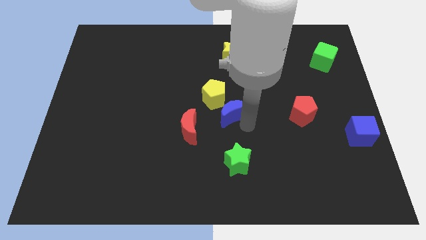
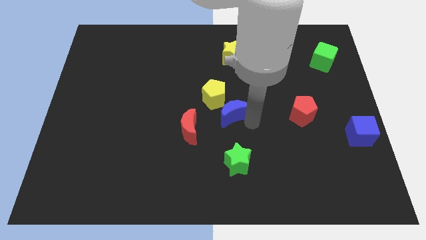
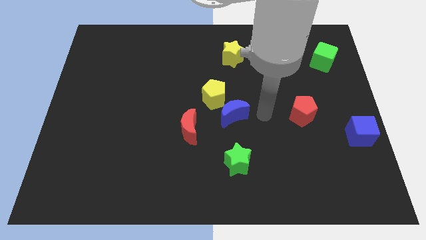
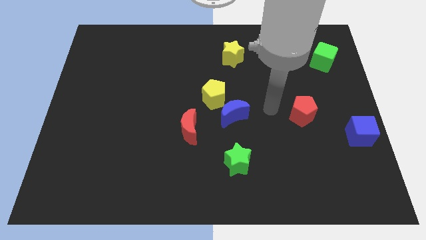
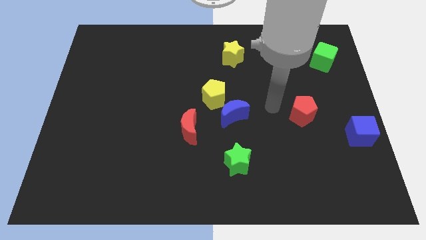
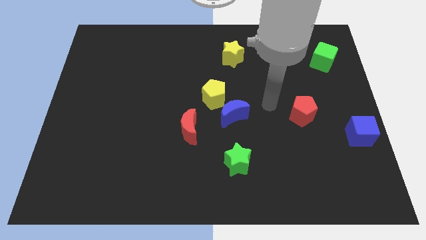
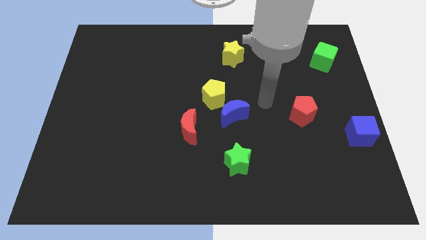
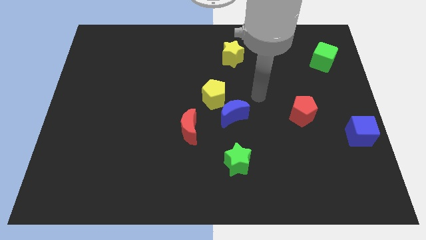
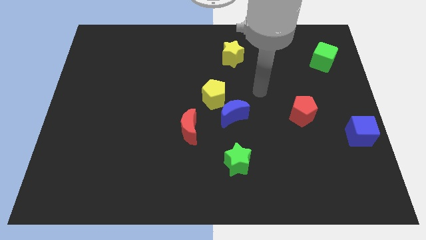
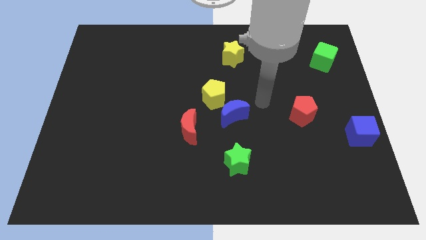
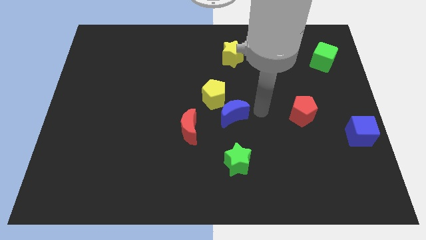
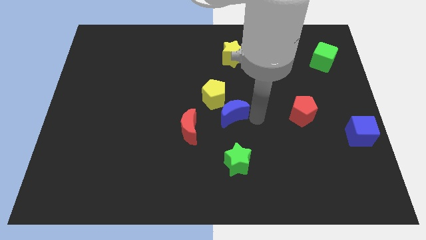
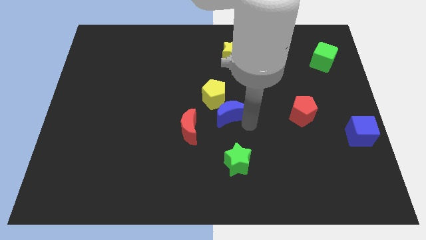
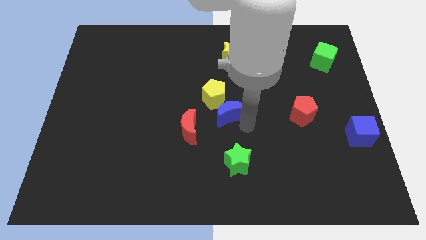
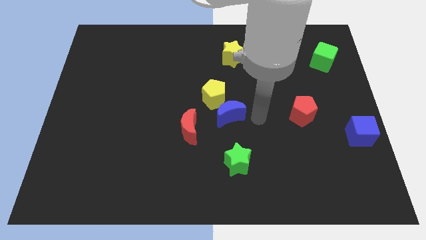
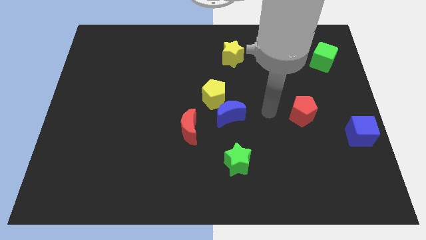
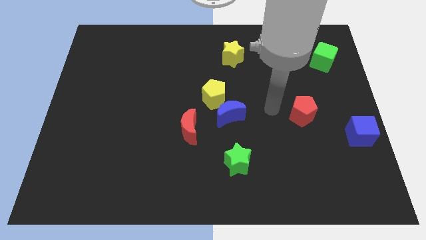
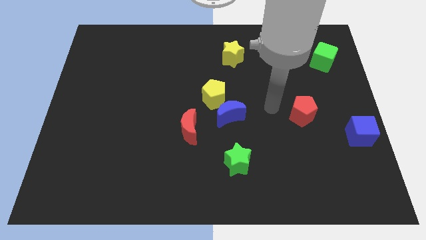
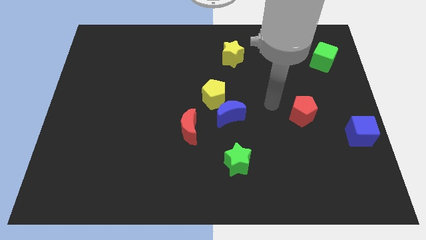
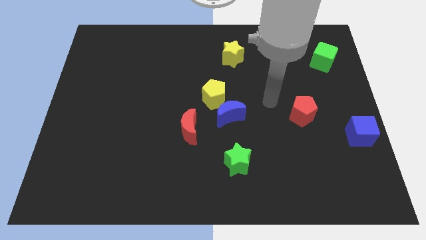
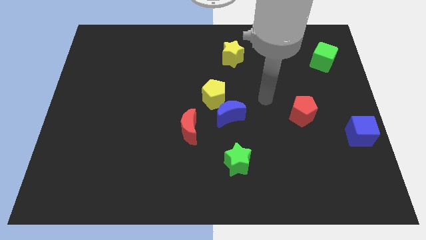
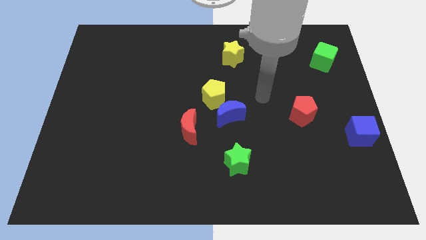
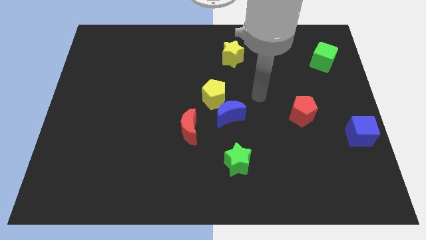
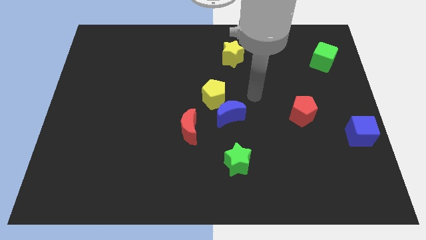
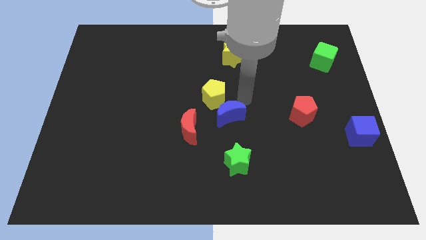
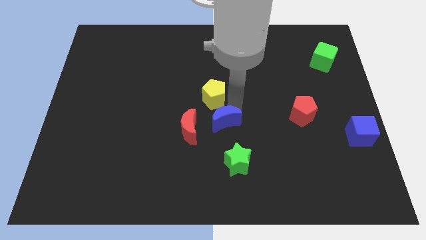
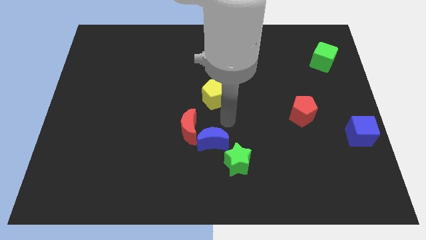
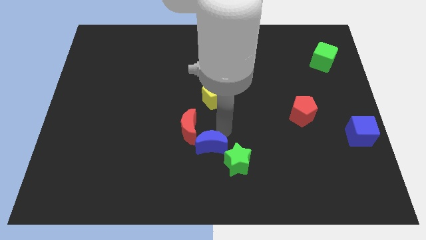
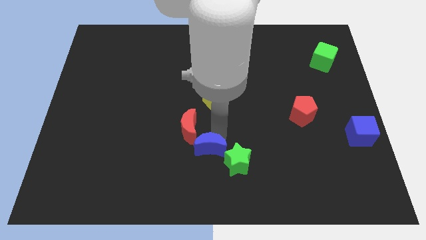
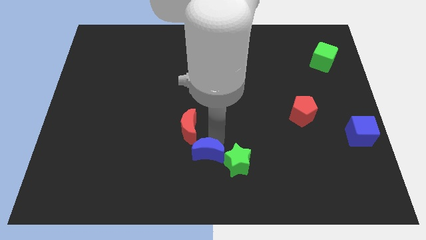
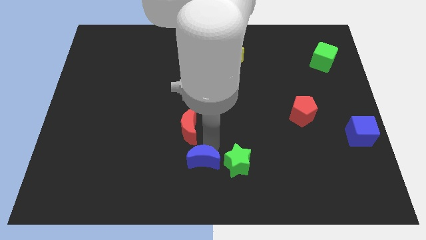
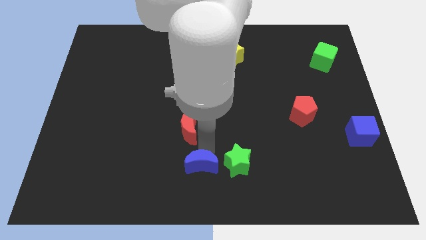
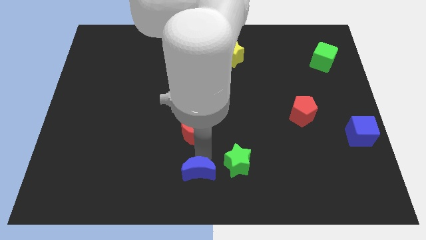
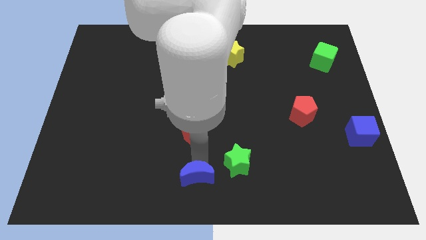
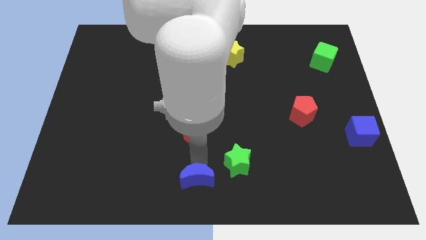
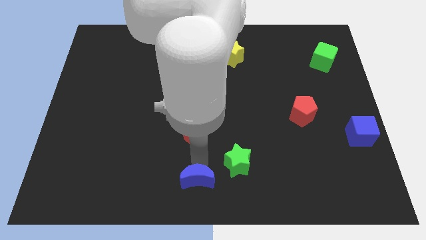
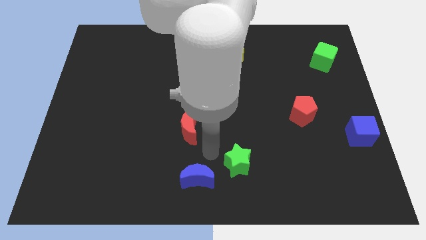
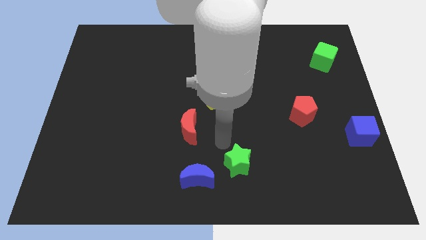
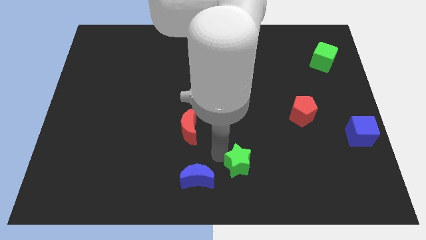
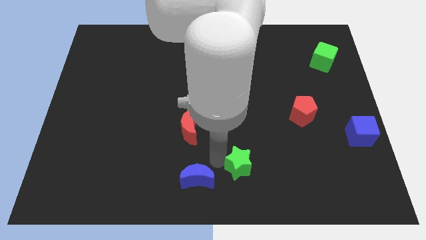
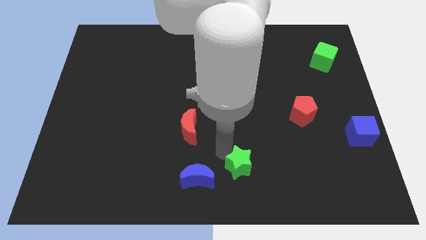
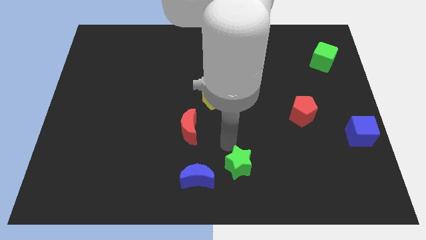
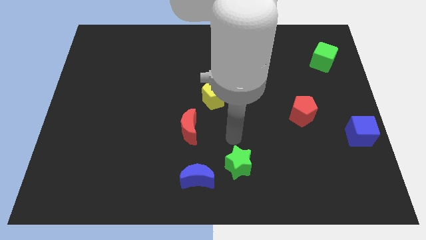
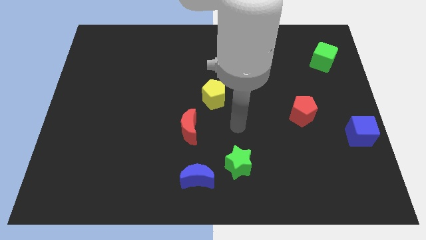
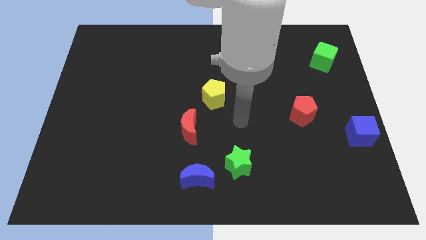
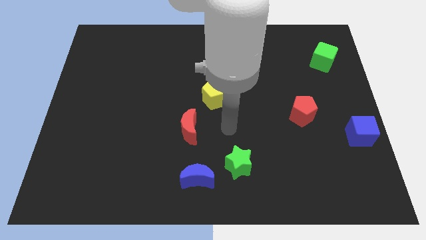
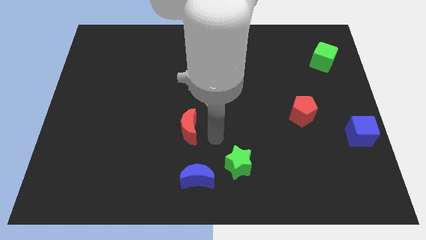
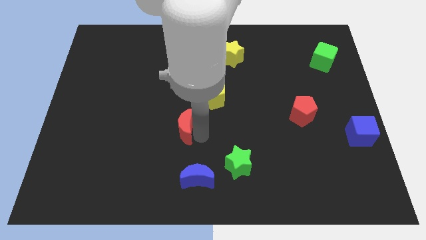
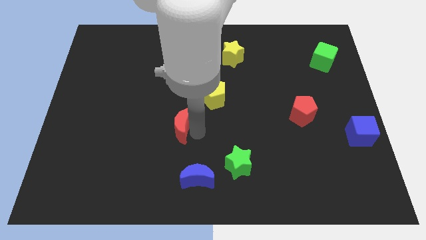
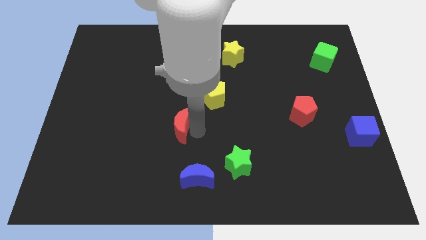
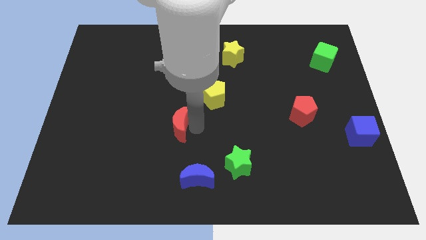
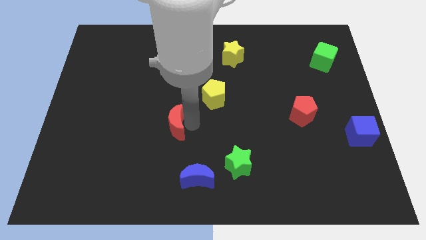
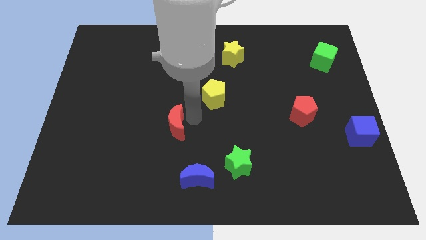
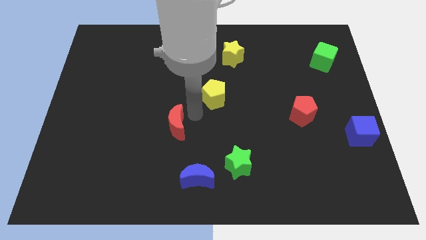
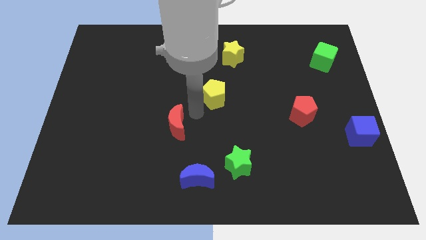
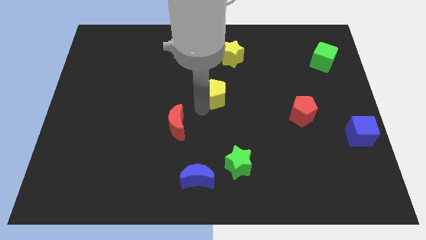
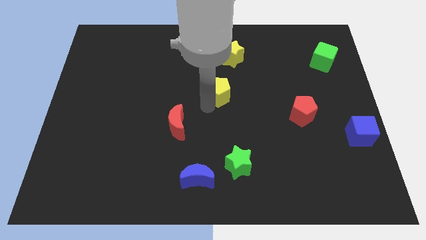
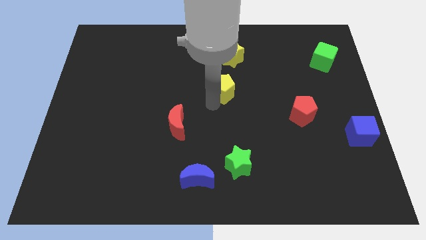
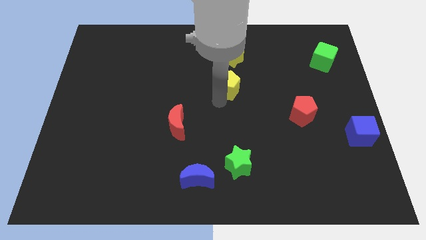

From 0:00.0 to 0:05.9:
drag the blue moon towards the bottom center of the board

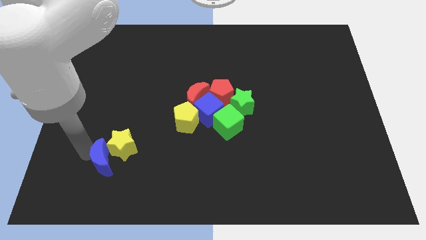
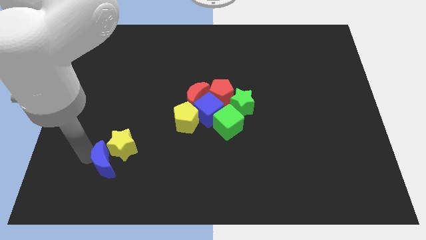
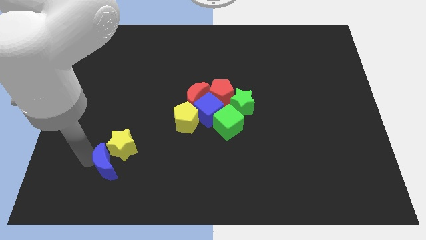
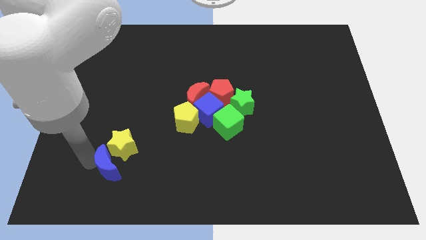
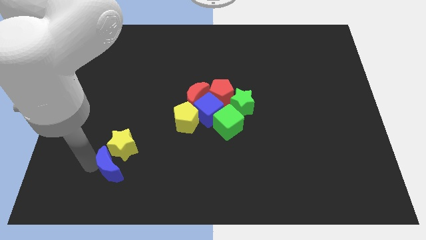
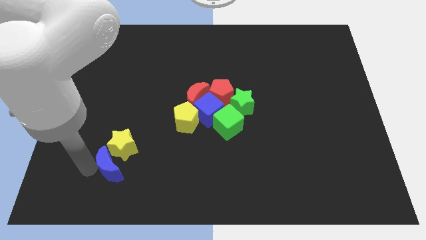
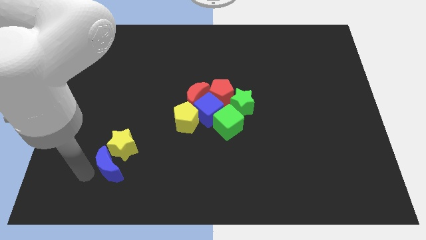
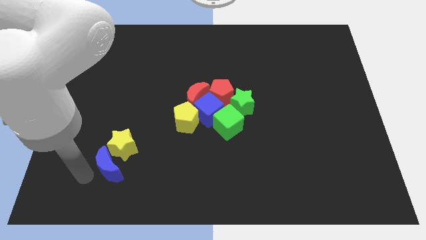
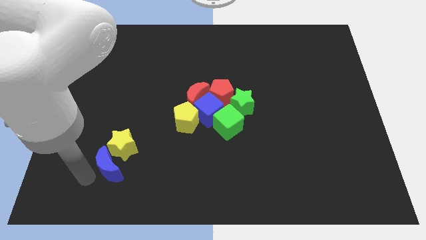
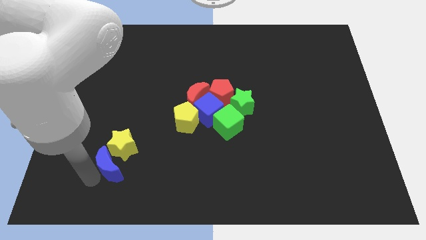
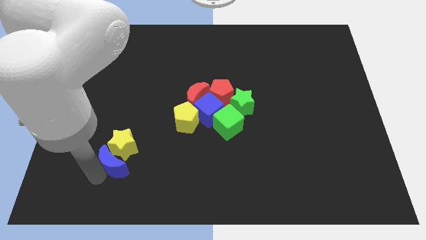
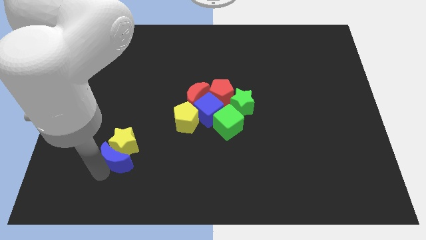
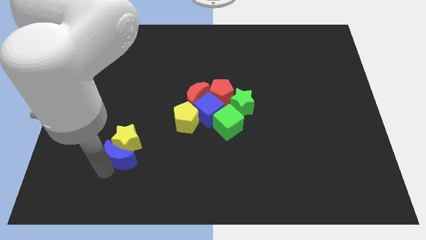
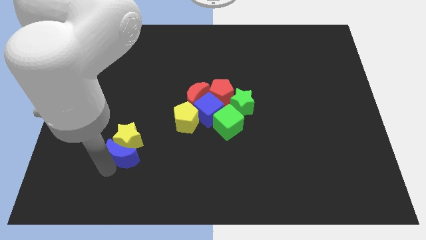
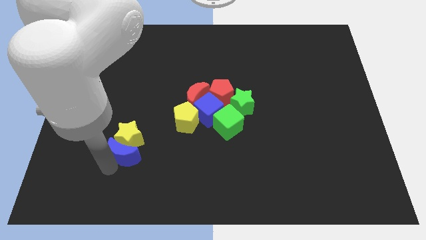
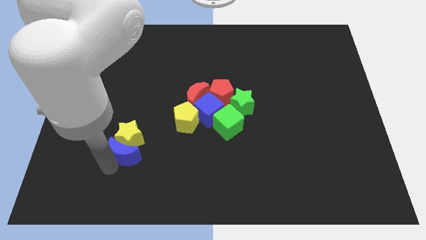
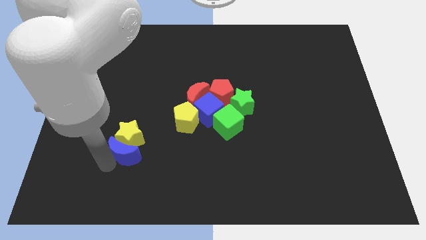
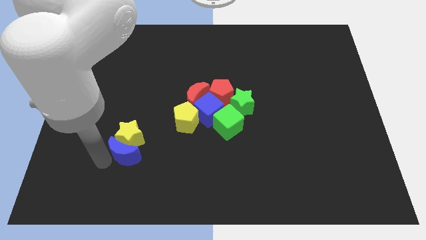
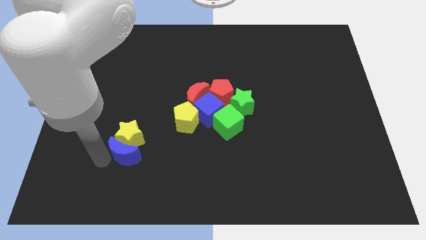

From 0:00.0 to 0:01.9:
move yellow star and blue moon together slightly to the top side of the board

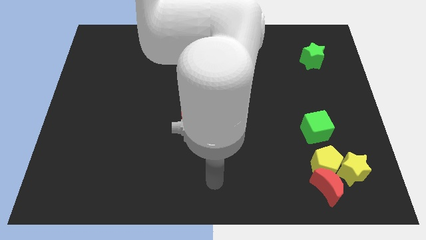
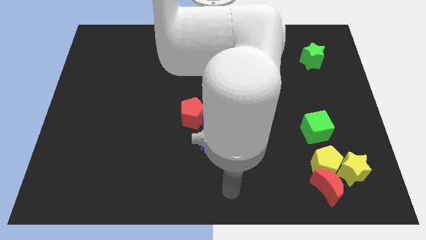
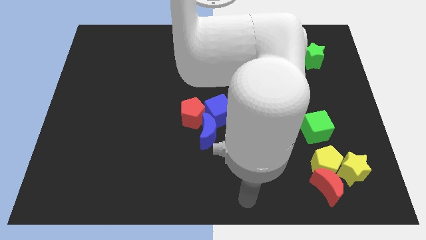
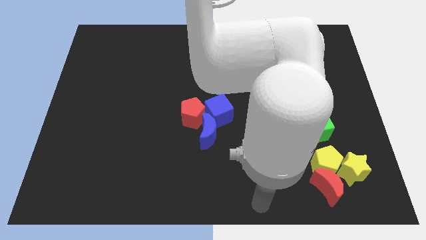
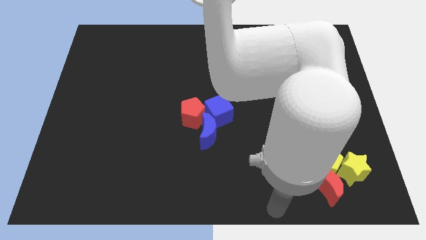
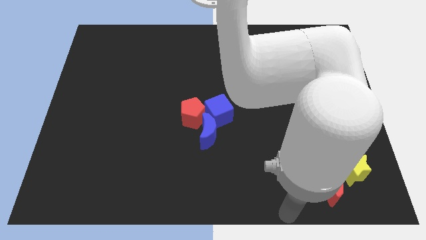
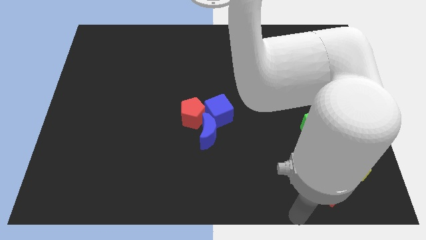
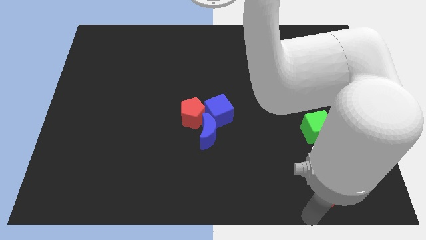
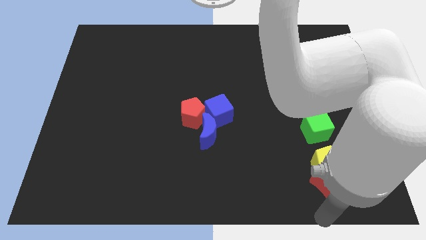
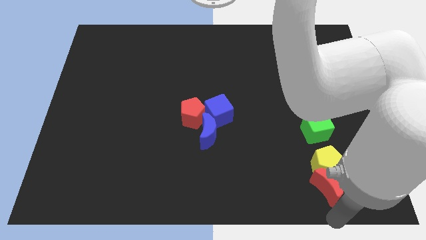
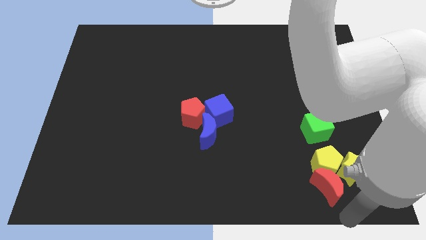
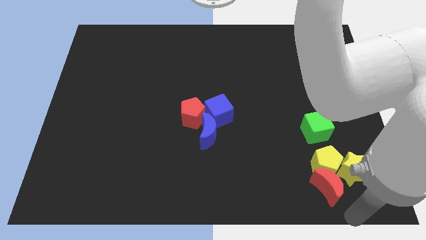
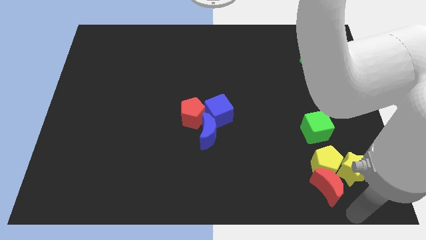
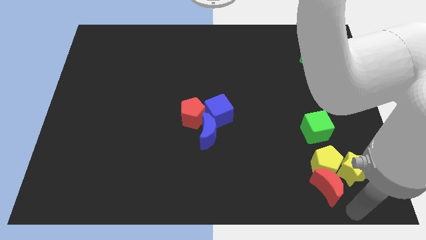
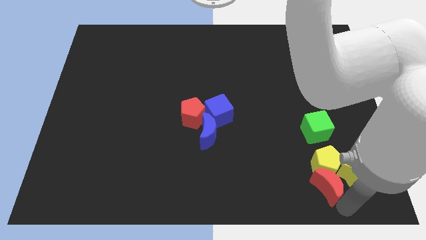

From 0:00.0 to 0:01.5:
move your arm to the bottom of the red moon
